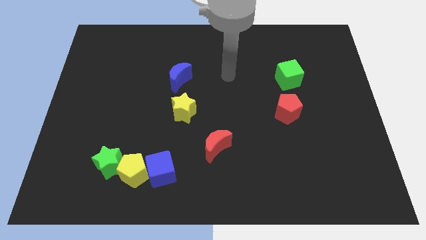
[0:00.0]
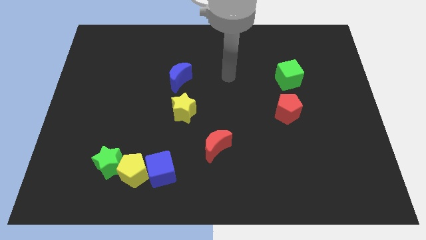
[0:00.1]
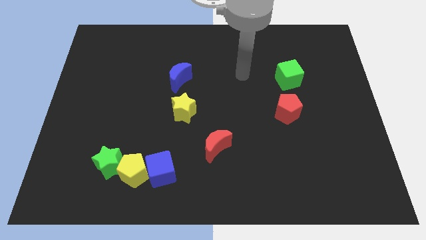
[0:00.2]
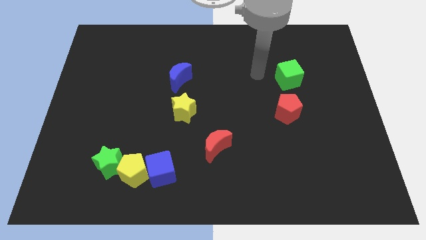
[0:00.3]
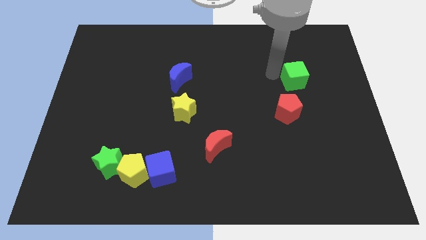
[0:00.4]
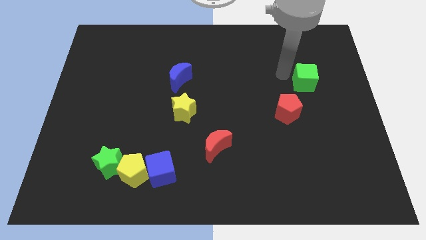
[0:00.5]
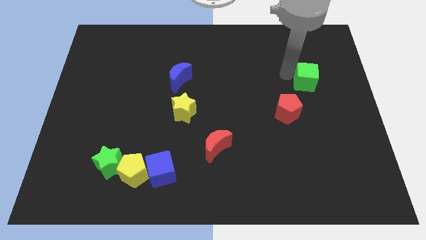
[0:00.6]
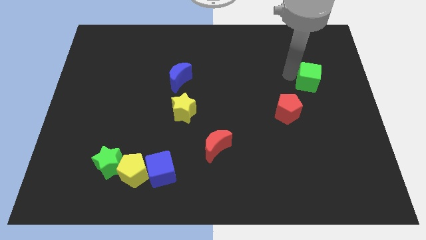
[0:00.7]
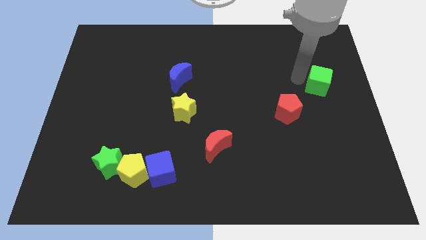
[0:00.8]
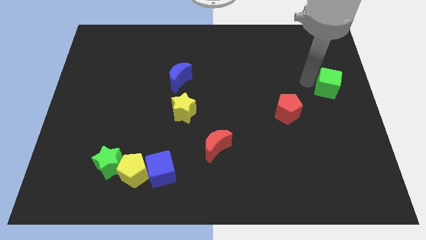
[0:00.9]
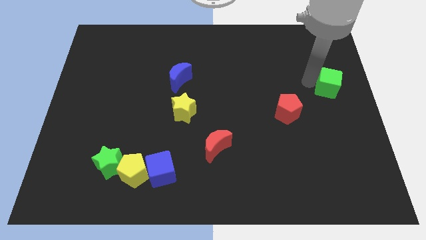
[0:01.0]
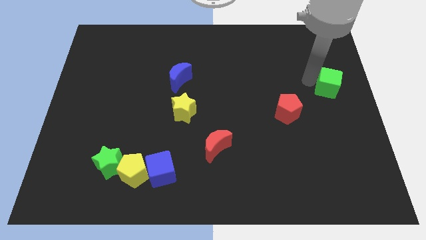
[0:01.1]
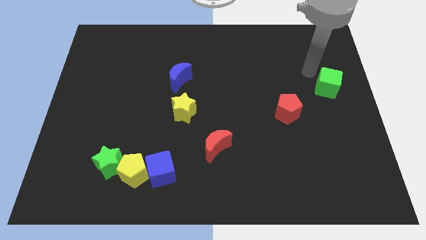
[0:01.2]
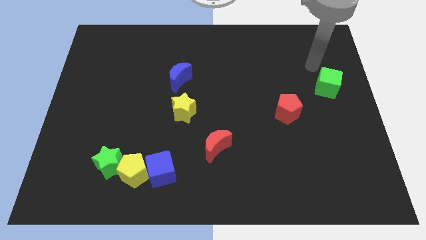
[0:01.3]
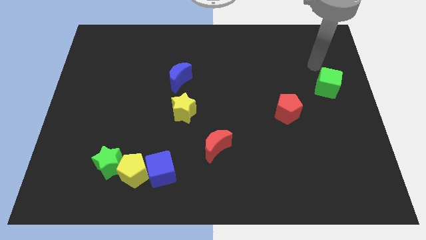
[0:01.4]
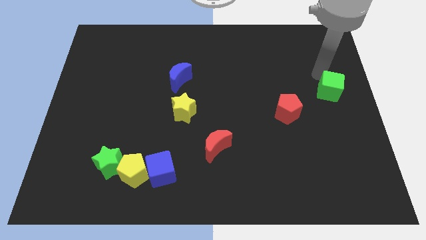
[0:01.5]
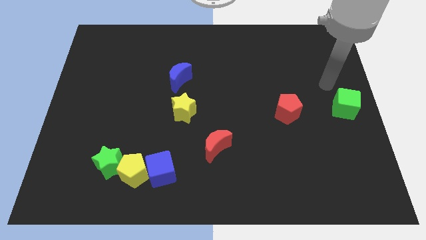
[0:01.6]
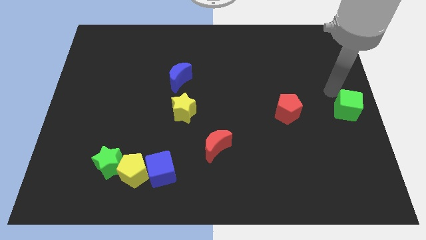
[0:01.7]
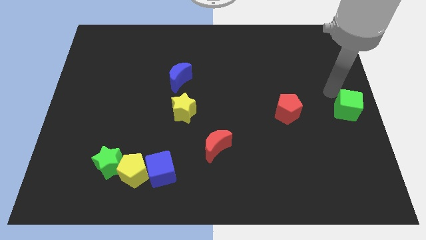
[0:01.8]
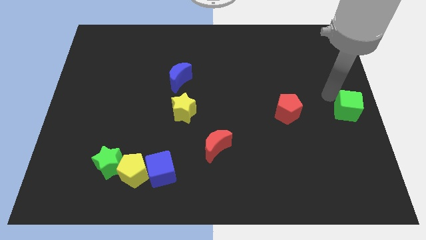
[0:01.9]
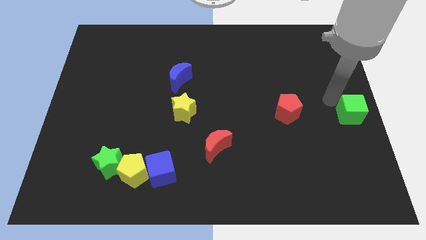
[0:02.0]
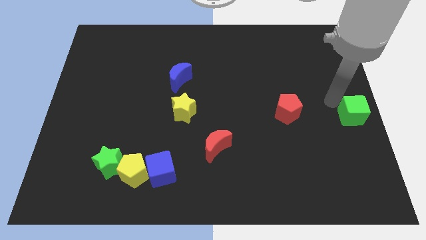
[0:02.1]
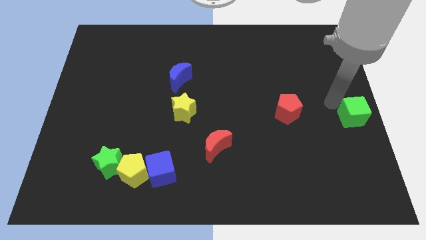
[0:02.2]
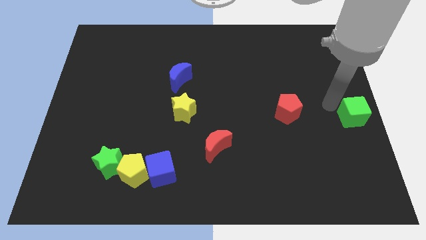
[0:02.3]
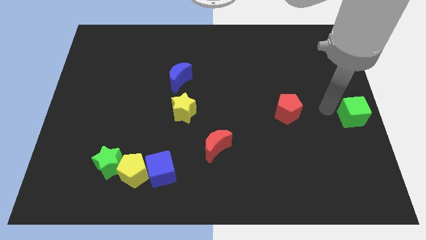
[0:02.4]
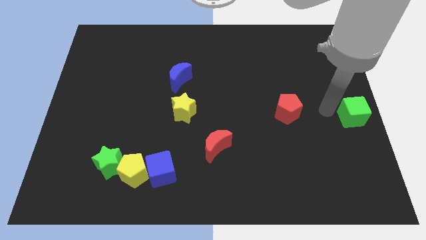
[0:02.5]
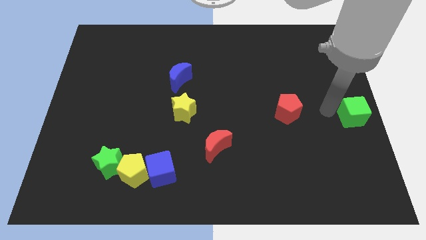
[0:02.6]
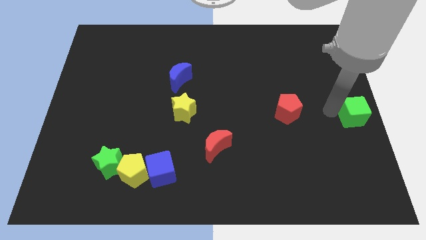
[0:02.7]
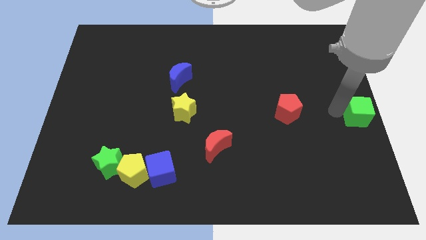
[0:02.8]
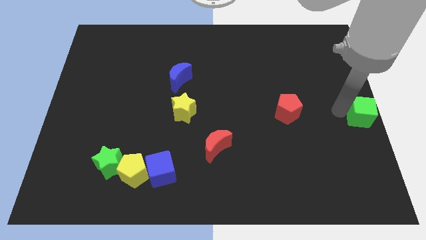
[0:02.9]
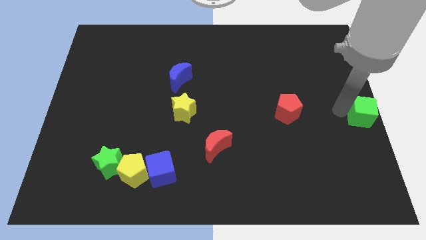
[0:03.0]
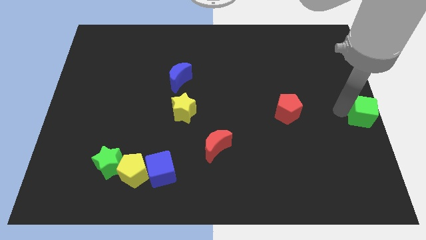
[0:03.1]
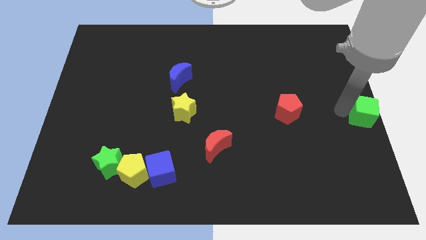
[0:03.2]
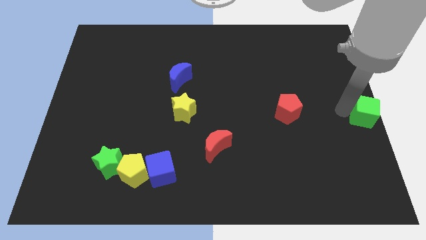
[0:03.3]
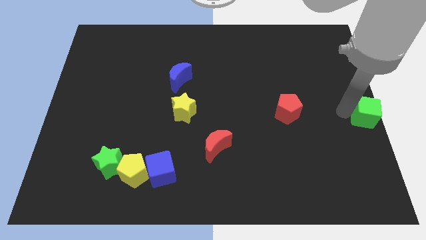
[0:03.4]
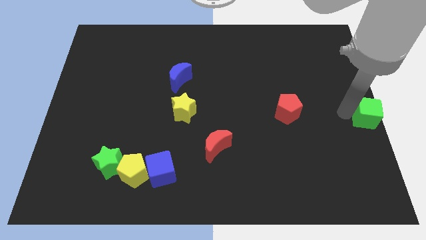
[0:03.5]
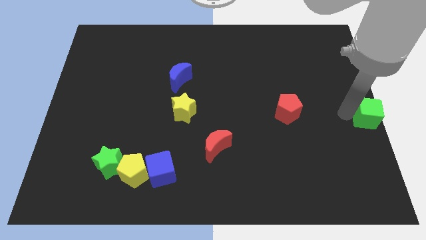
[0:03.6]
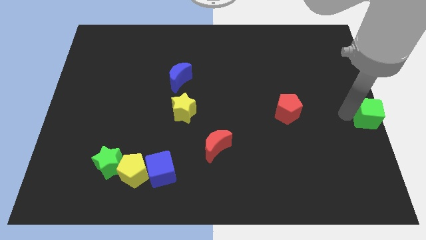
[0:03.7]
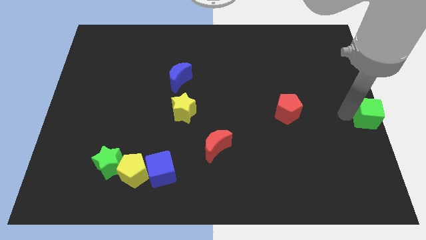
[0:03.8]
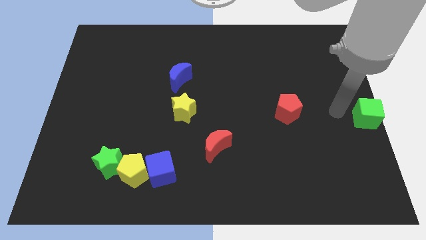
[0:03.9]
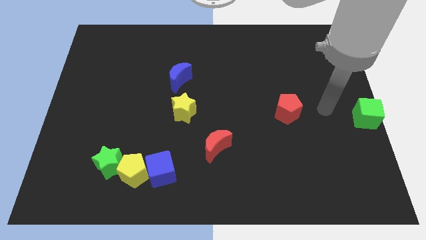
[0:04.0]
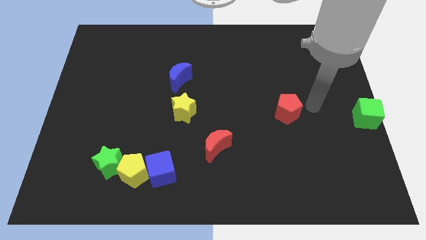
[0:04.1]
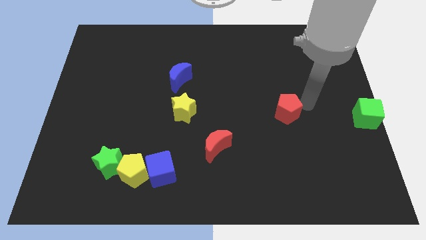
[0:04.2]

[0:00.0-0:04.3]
move the green cube to the center right

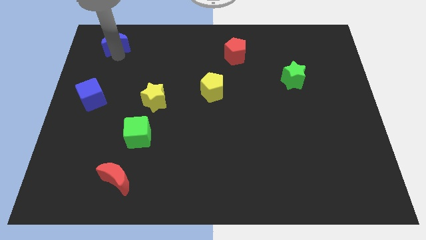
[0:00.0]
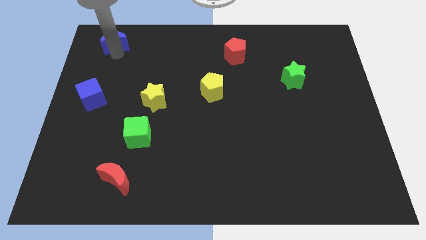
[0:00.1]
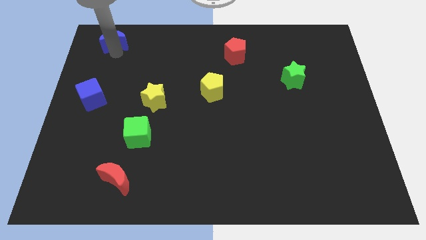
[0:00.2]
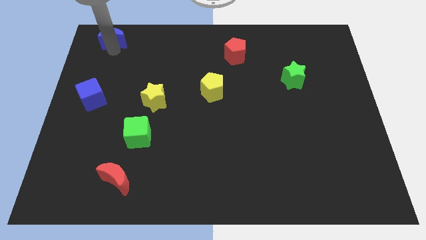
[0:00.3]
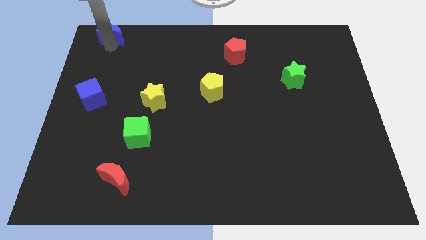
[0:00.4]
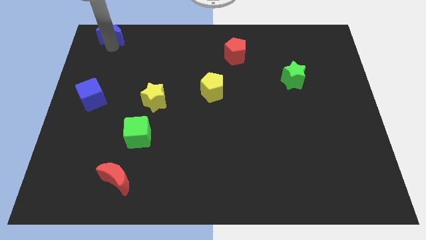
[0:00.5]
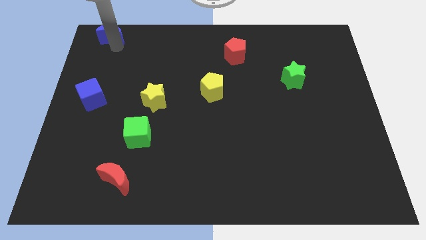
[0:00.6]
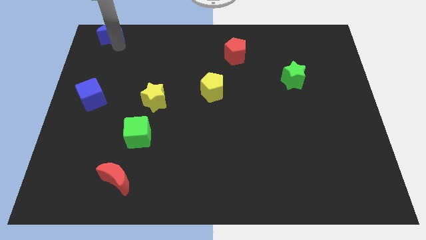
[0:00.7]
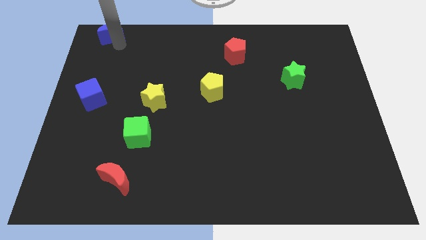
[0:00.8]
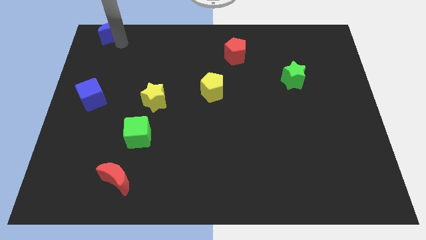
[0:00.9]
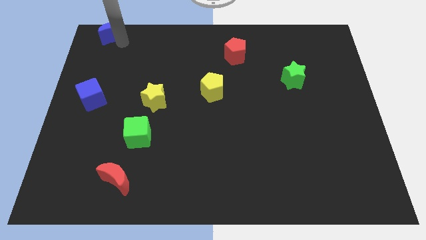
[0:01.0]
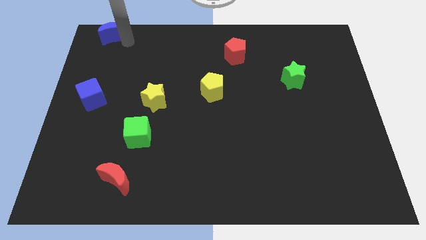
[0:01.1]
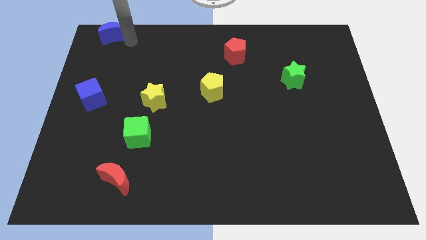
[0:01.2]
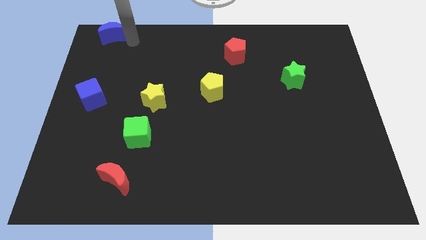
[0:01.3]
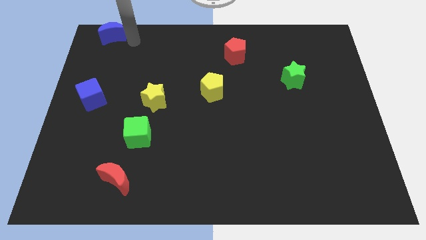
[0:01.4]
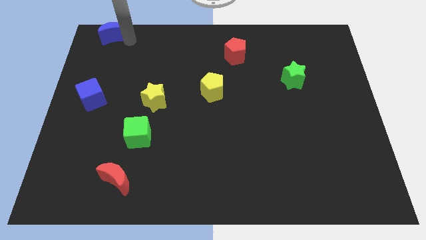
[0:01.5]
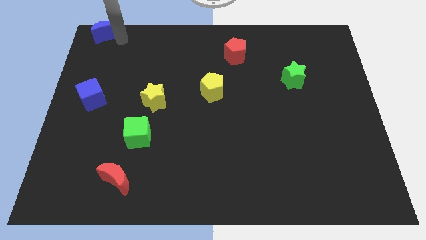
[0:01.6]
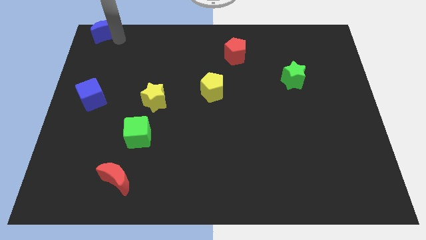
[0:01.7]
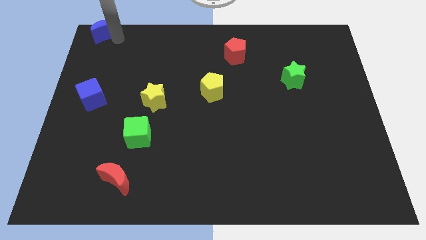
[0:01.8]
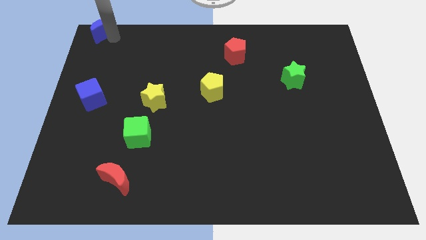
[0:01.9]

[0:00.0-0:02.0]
push the blue moon towards the top left

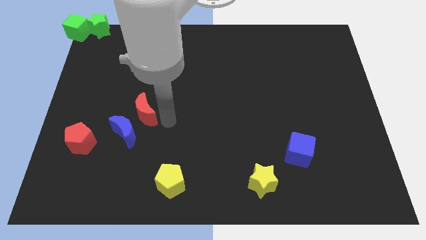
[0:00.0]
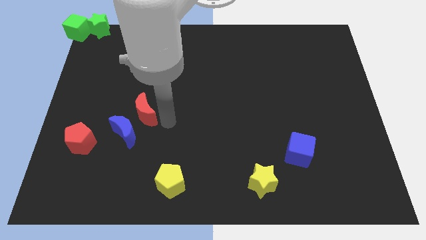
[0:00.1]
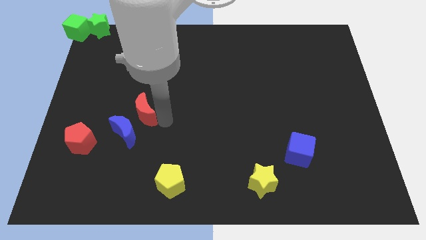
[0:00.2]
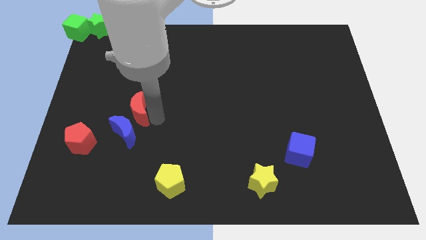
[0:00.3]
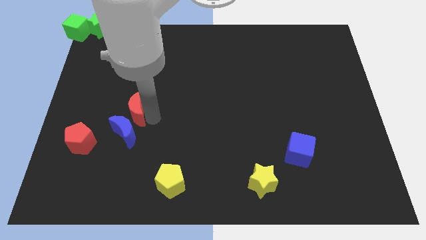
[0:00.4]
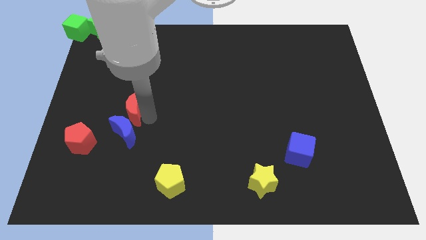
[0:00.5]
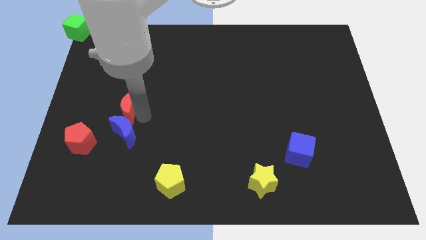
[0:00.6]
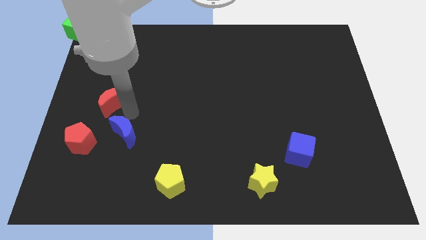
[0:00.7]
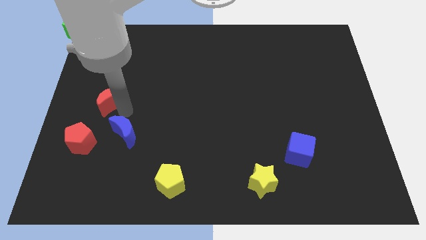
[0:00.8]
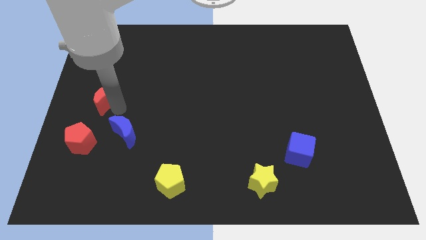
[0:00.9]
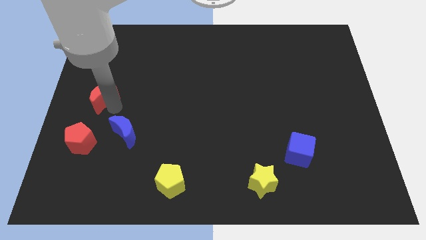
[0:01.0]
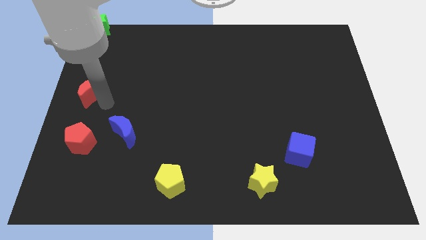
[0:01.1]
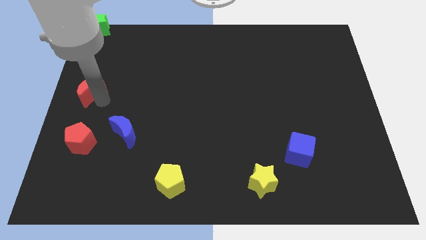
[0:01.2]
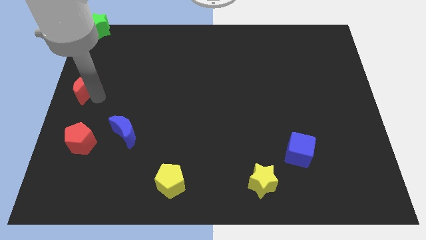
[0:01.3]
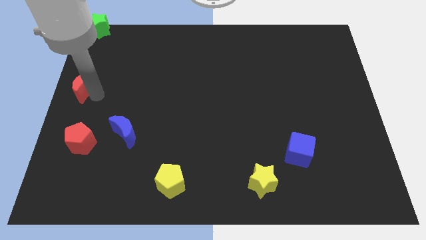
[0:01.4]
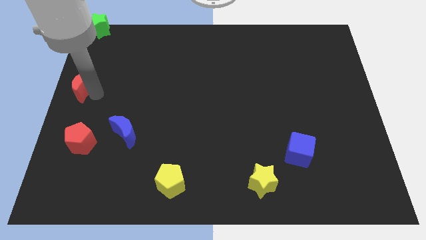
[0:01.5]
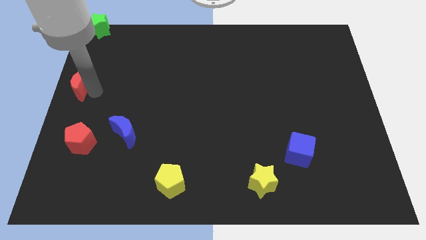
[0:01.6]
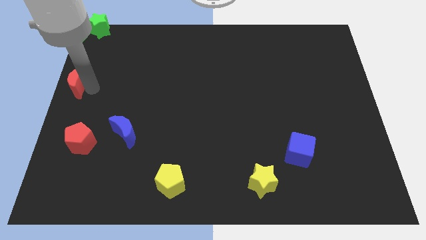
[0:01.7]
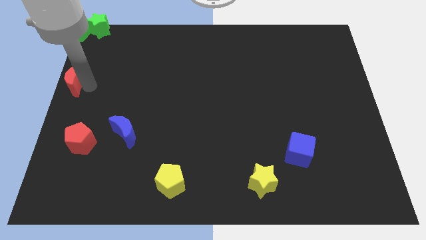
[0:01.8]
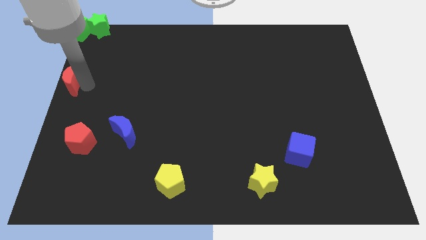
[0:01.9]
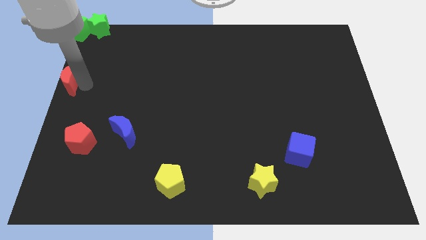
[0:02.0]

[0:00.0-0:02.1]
place the red crescent to the center left side

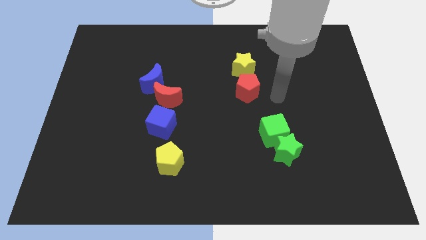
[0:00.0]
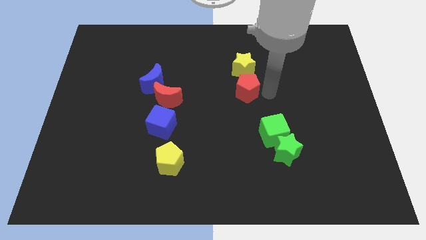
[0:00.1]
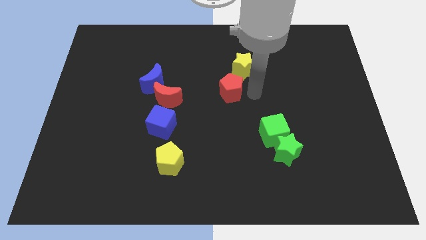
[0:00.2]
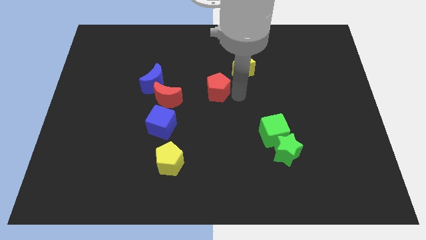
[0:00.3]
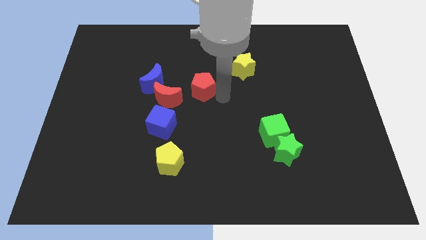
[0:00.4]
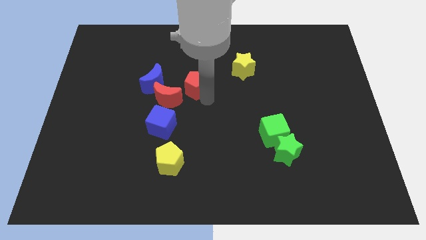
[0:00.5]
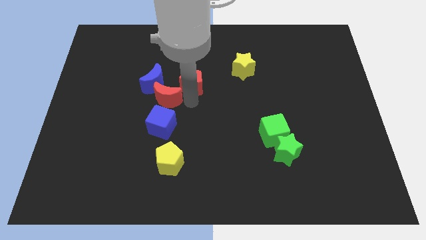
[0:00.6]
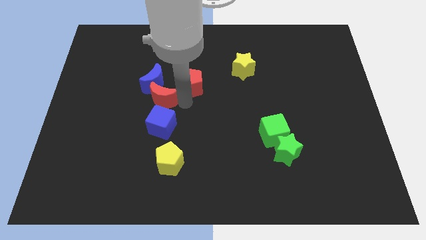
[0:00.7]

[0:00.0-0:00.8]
move red pentagon to the top right of the red crescent
